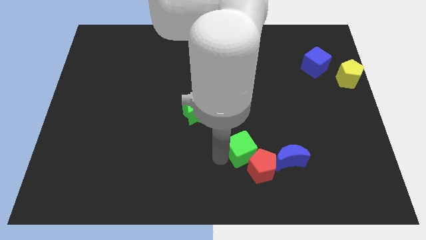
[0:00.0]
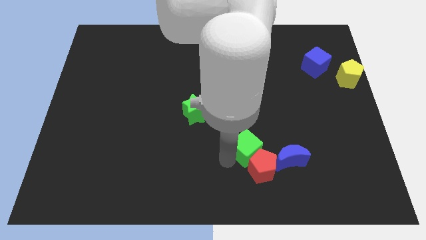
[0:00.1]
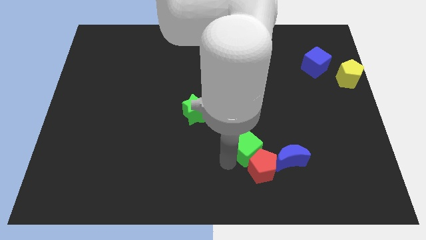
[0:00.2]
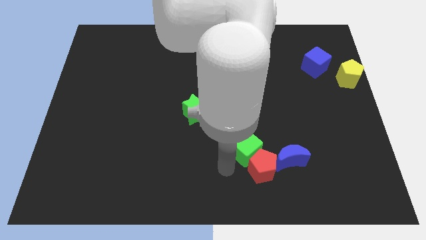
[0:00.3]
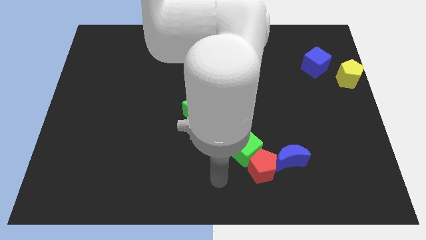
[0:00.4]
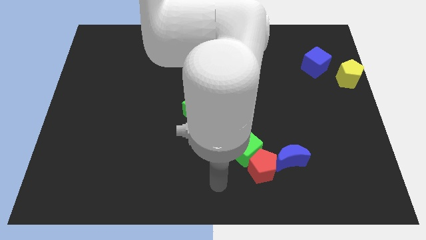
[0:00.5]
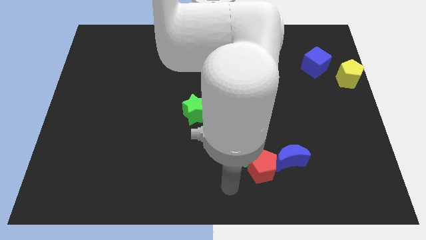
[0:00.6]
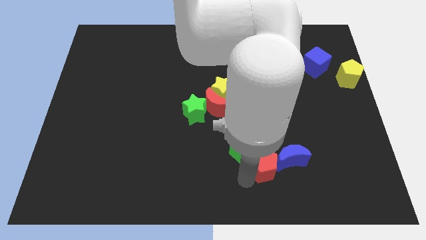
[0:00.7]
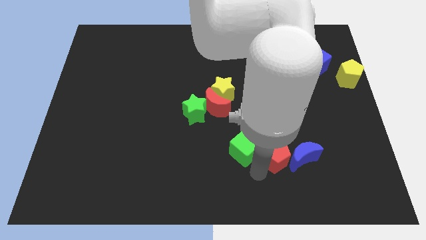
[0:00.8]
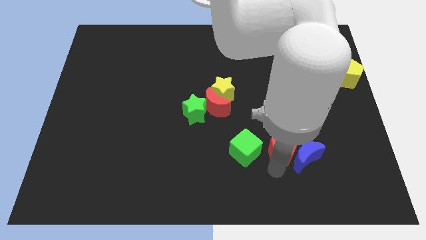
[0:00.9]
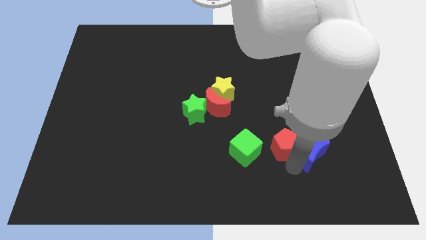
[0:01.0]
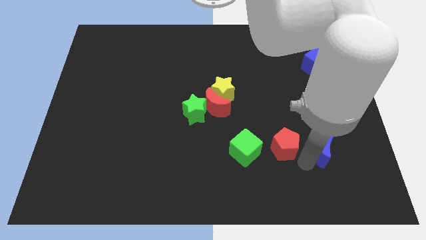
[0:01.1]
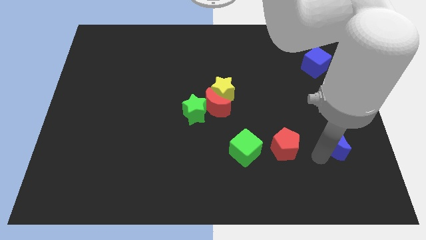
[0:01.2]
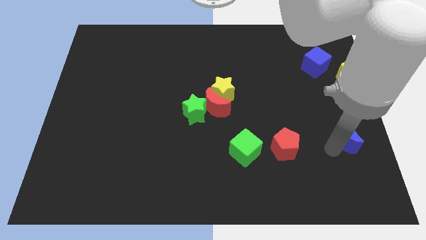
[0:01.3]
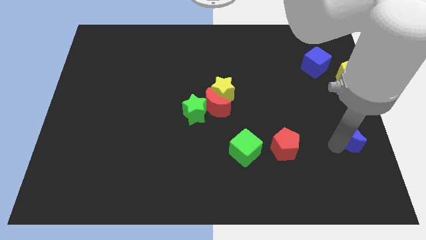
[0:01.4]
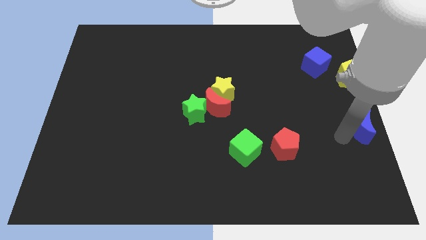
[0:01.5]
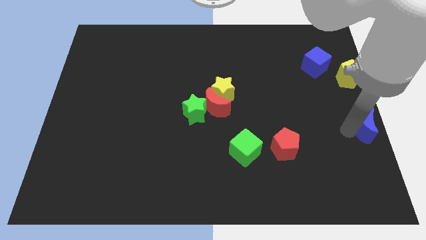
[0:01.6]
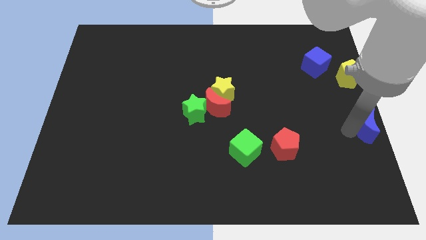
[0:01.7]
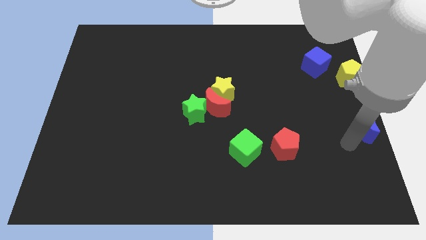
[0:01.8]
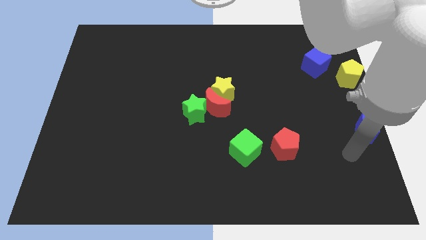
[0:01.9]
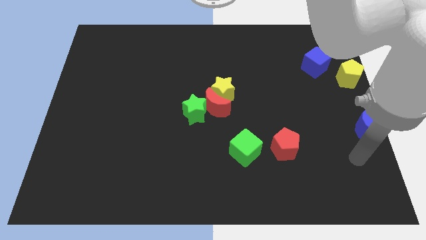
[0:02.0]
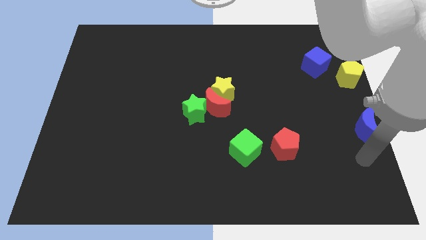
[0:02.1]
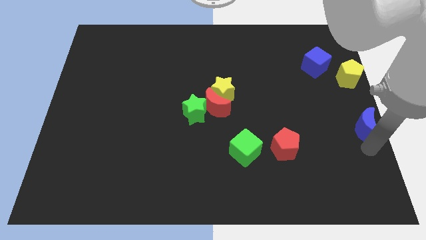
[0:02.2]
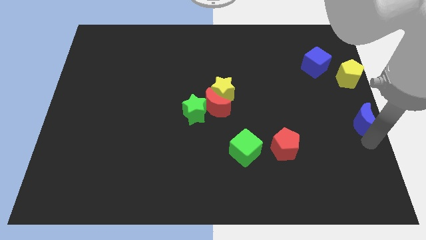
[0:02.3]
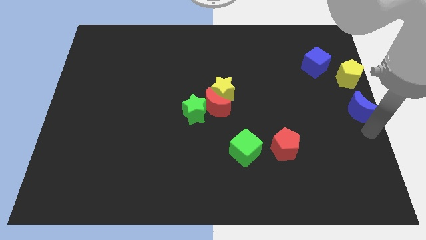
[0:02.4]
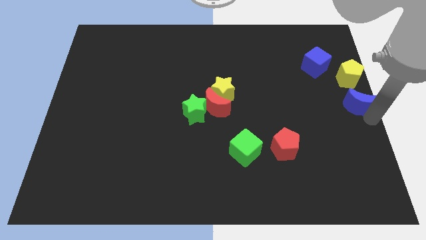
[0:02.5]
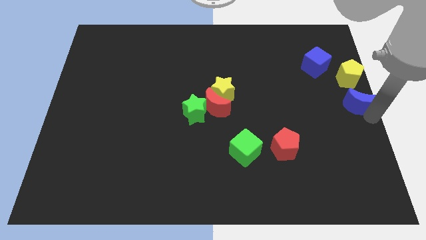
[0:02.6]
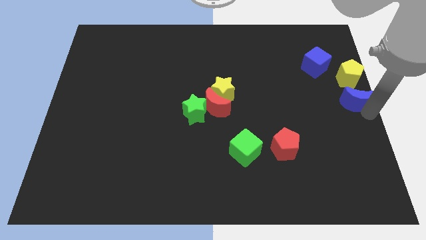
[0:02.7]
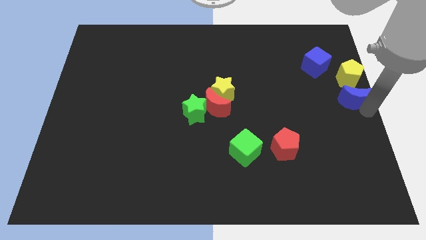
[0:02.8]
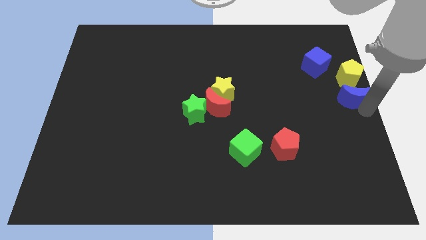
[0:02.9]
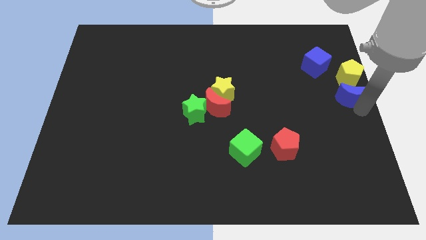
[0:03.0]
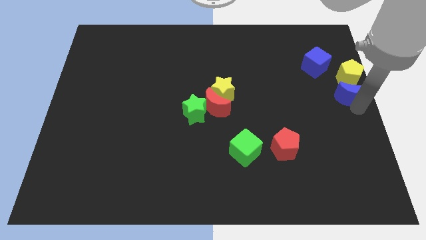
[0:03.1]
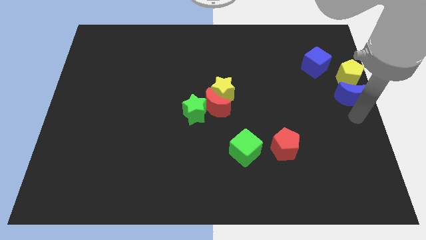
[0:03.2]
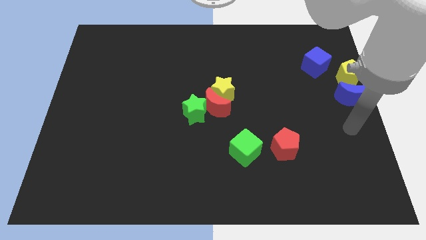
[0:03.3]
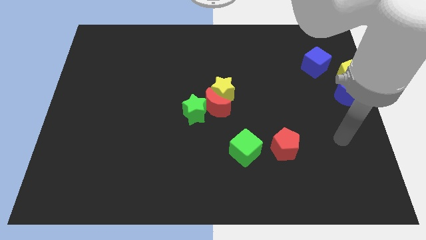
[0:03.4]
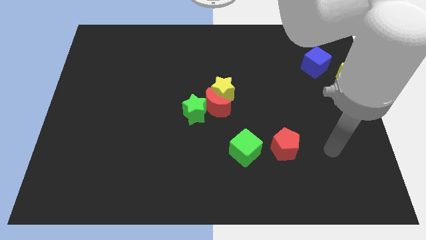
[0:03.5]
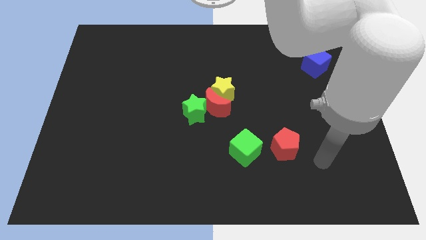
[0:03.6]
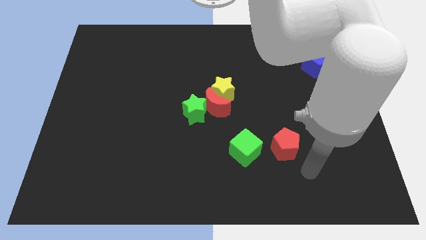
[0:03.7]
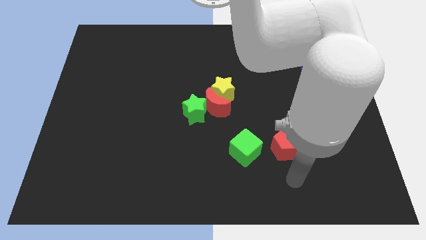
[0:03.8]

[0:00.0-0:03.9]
push blue crescent below yellow pentagon

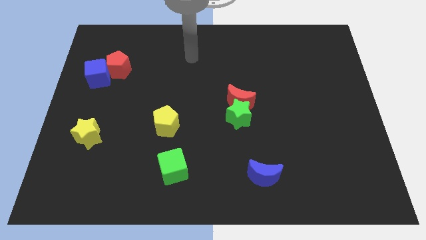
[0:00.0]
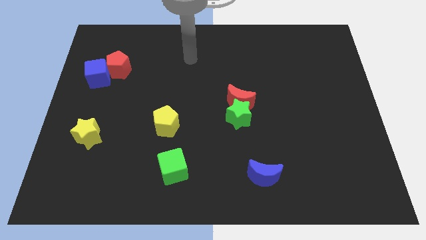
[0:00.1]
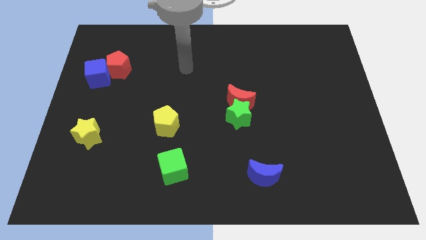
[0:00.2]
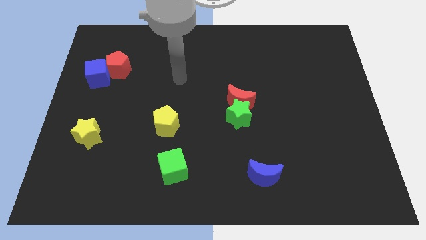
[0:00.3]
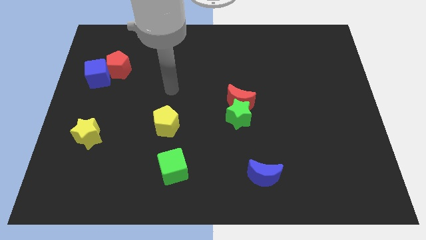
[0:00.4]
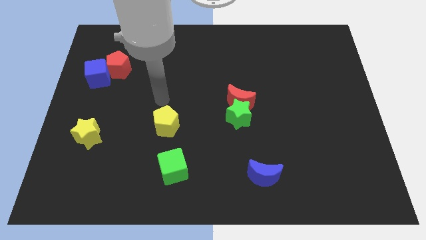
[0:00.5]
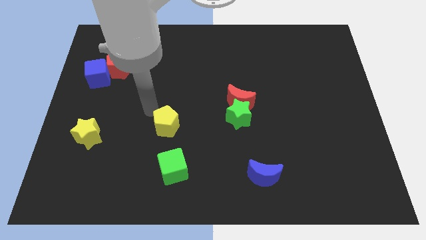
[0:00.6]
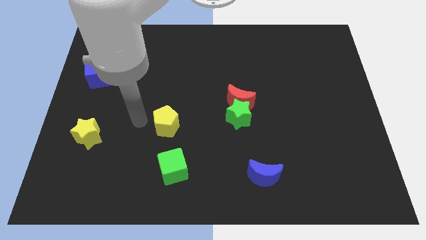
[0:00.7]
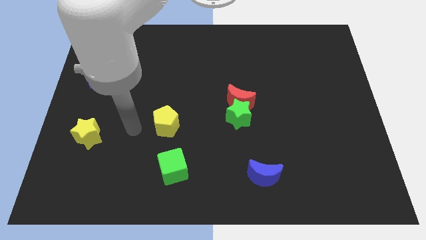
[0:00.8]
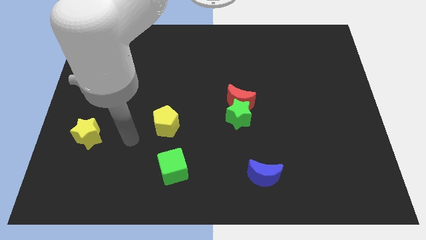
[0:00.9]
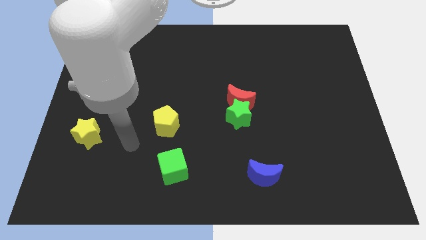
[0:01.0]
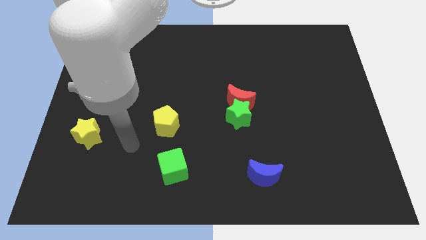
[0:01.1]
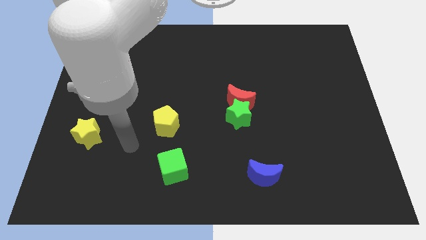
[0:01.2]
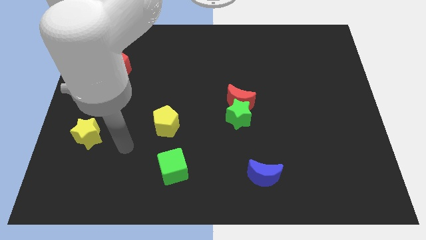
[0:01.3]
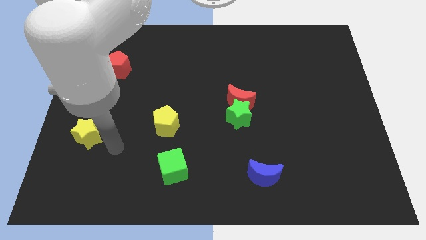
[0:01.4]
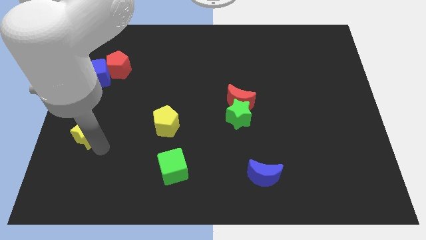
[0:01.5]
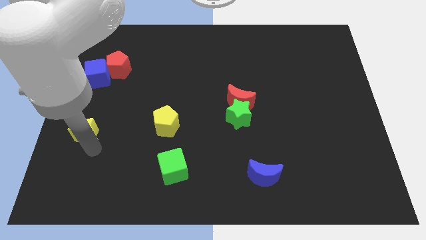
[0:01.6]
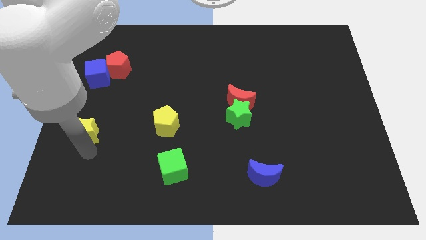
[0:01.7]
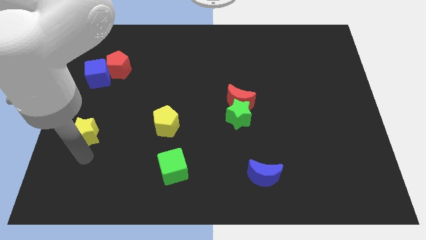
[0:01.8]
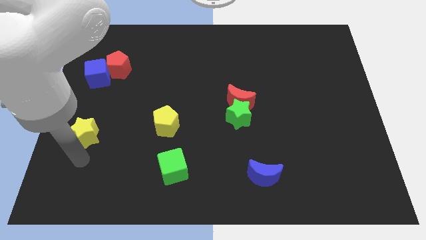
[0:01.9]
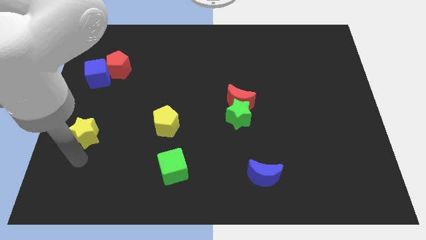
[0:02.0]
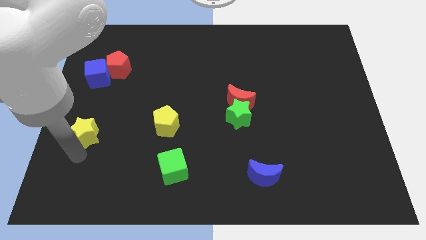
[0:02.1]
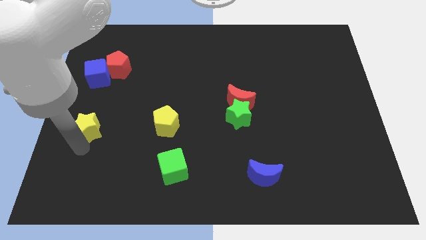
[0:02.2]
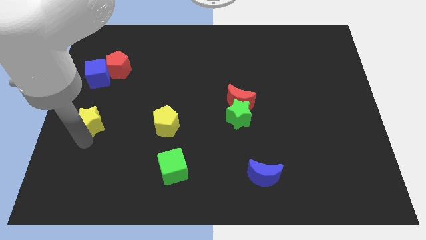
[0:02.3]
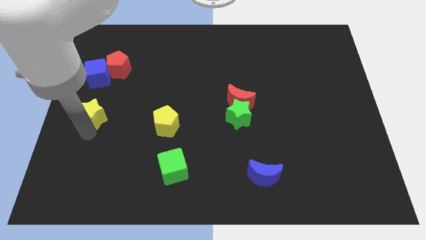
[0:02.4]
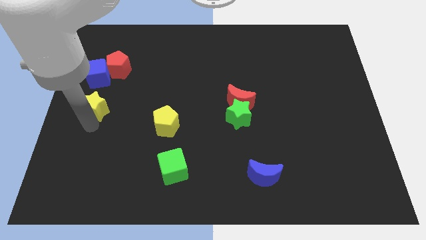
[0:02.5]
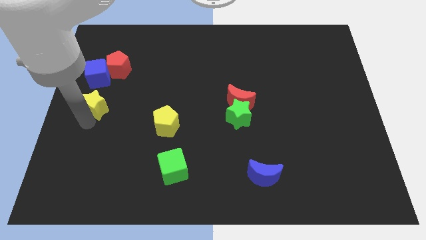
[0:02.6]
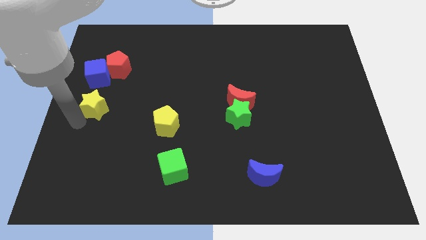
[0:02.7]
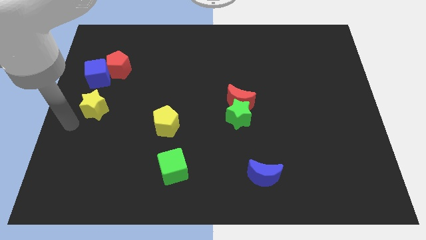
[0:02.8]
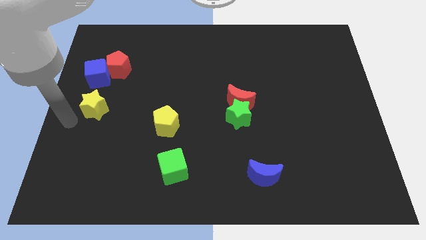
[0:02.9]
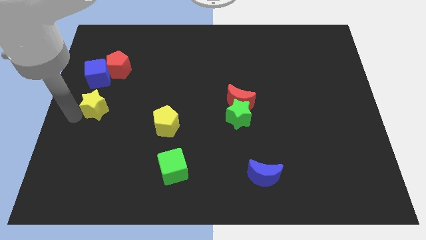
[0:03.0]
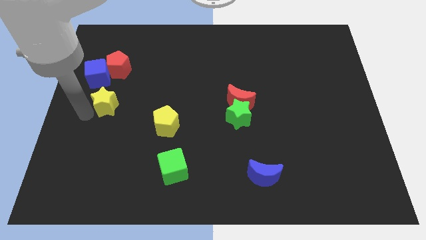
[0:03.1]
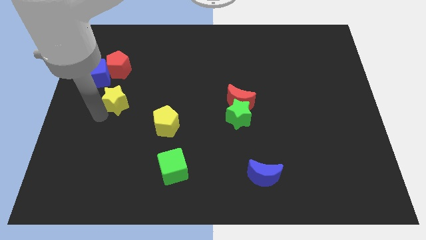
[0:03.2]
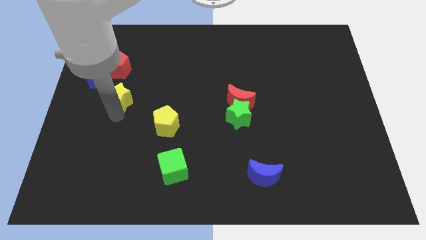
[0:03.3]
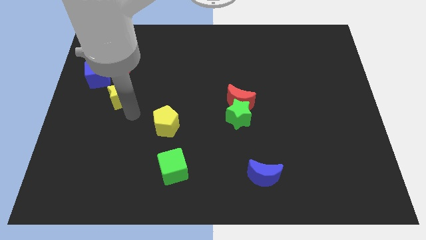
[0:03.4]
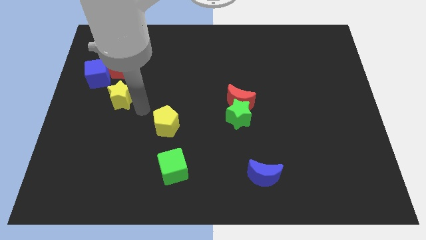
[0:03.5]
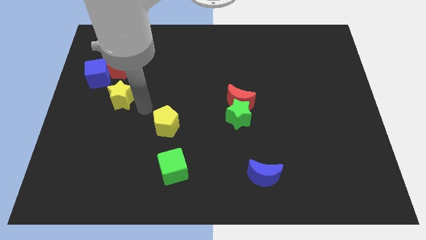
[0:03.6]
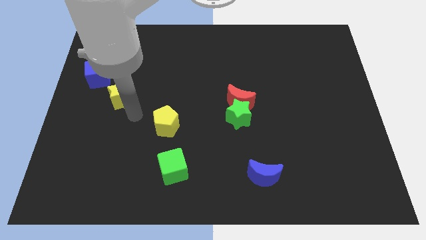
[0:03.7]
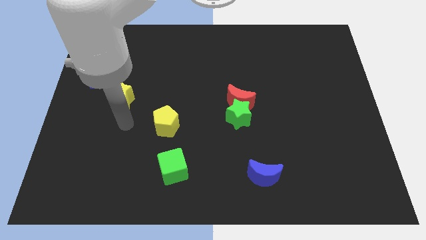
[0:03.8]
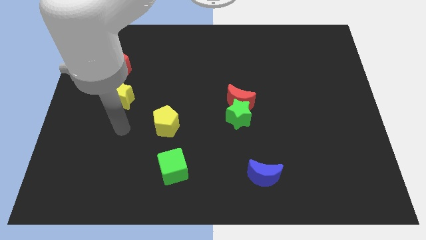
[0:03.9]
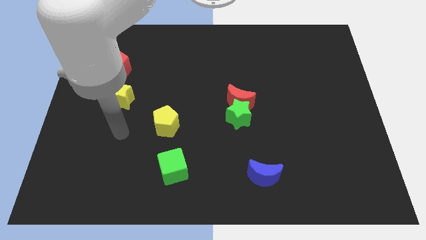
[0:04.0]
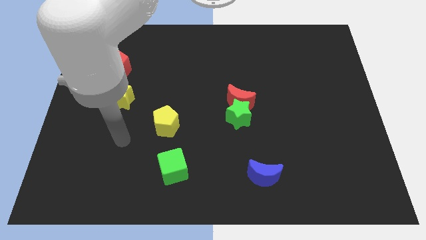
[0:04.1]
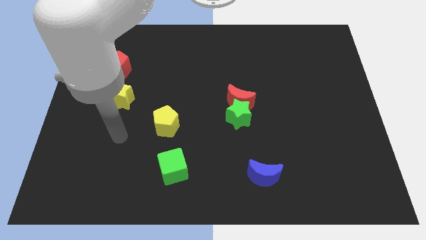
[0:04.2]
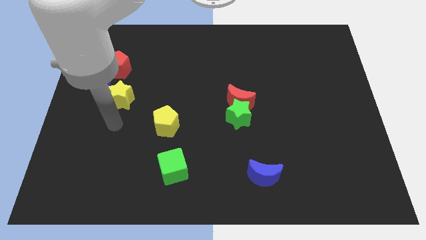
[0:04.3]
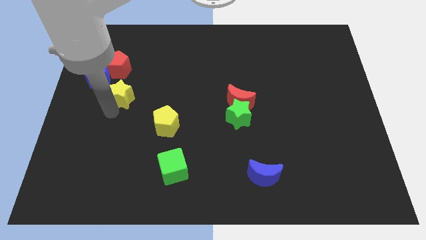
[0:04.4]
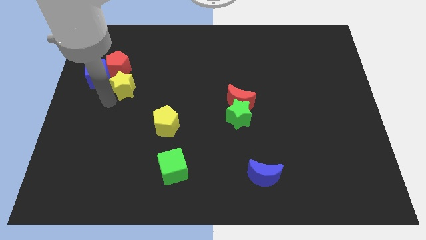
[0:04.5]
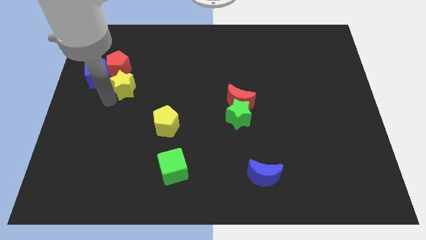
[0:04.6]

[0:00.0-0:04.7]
push the yellow star to the bottom of the red pentagon

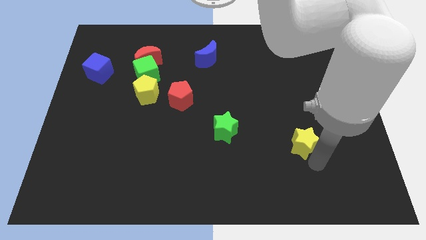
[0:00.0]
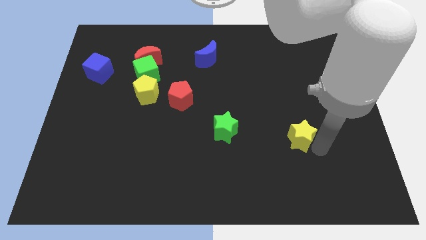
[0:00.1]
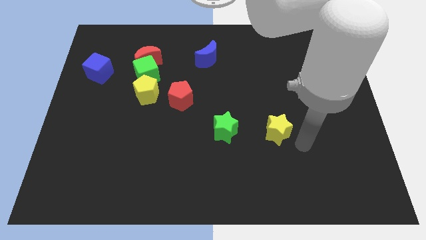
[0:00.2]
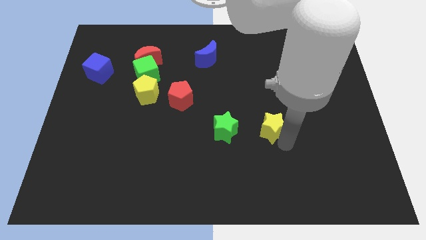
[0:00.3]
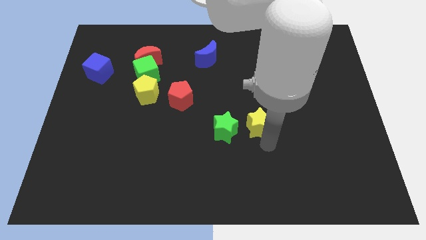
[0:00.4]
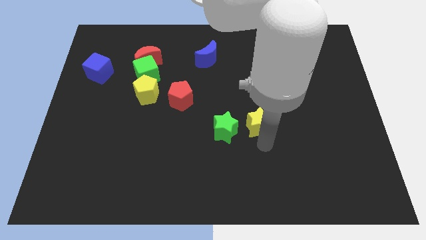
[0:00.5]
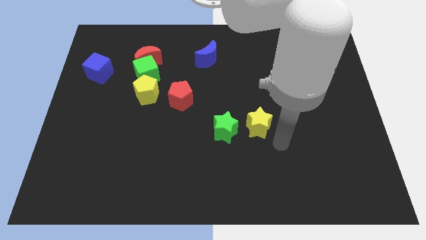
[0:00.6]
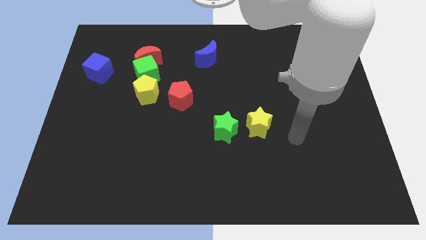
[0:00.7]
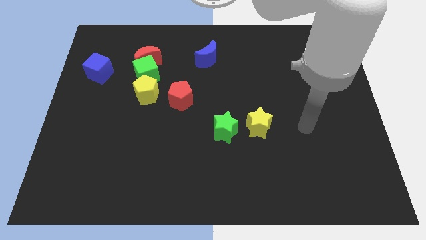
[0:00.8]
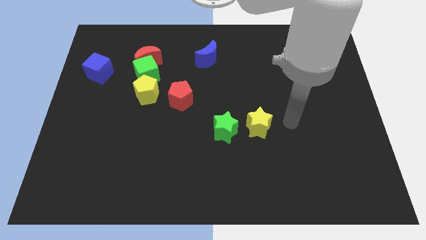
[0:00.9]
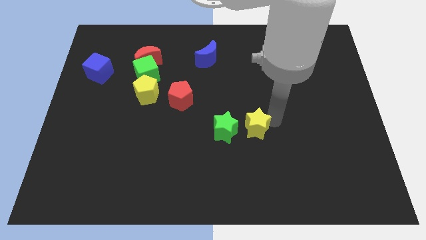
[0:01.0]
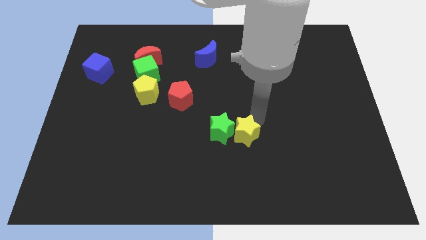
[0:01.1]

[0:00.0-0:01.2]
put the yellow star on the right side of the green star
